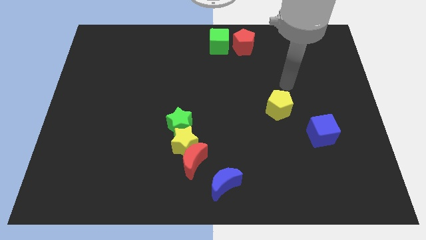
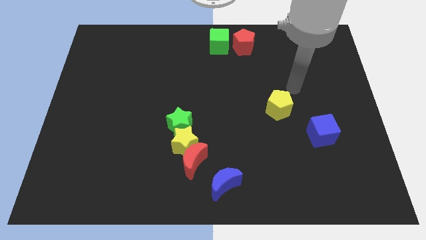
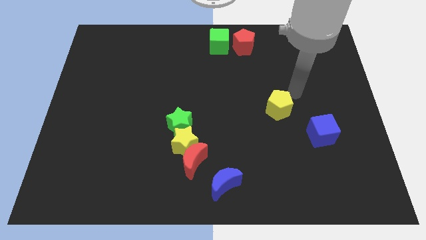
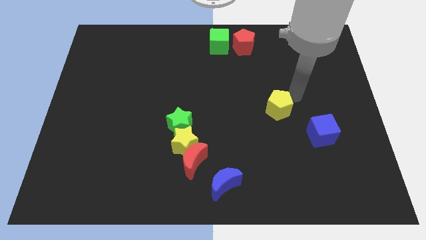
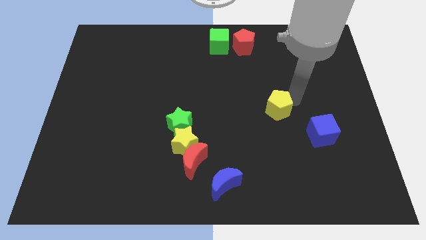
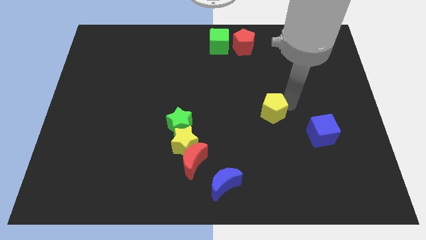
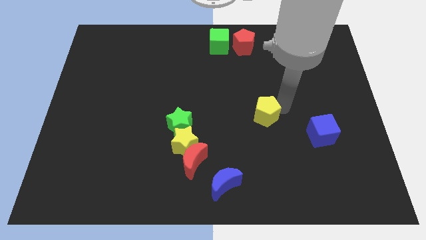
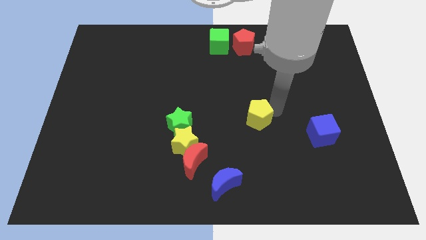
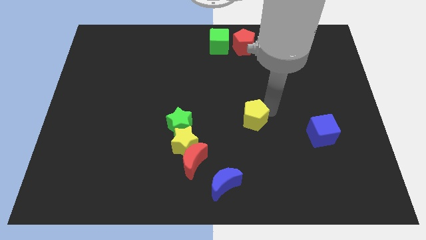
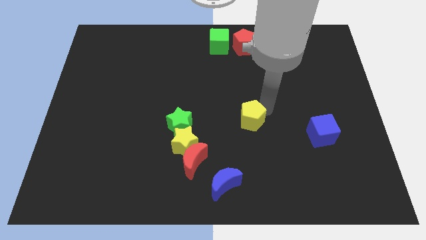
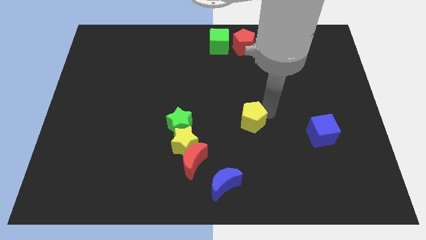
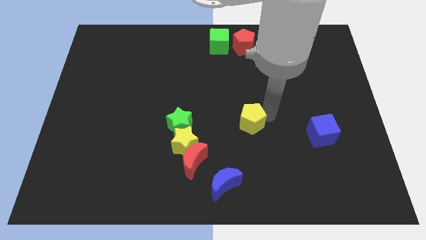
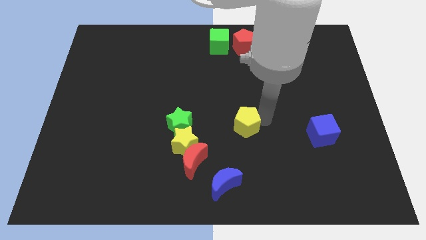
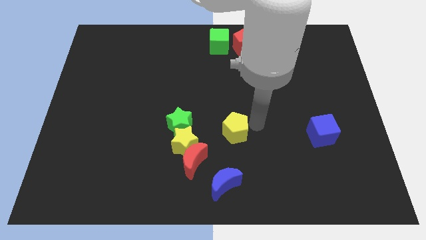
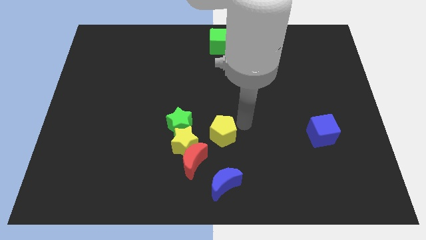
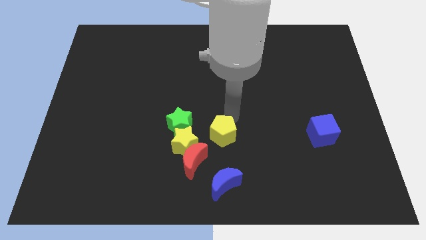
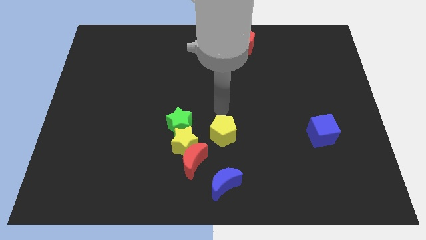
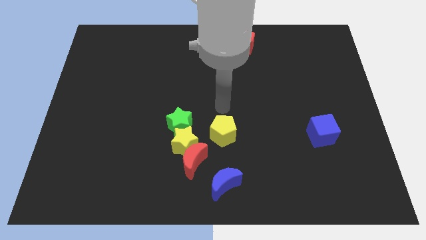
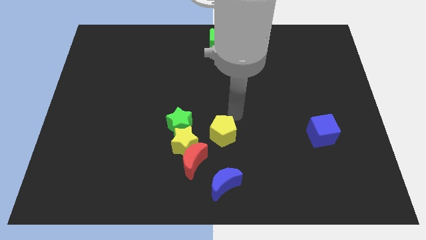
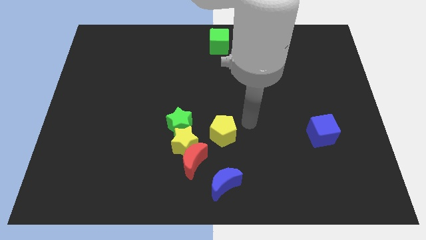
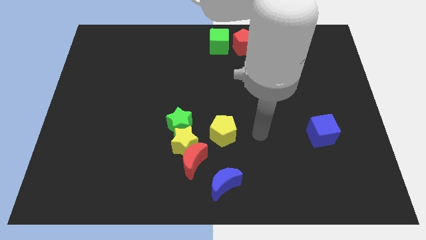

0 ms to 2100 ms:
place the yellow pentagon to the right of the yellow star

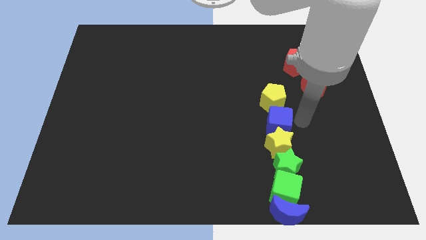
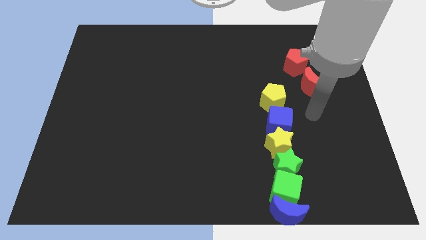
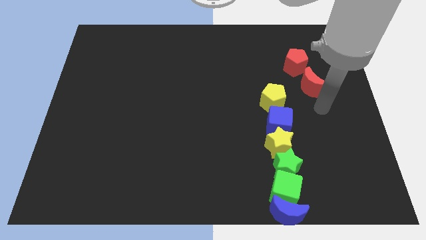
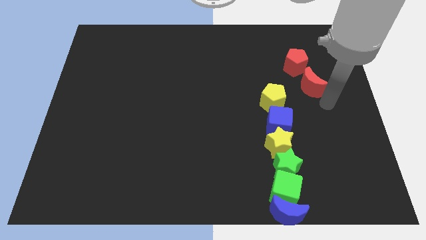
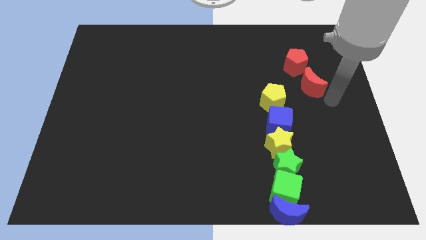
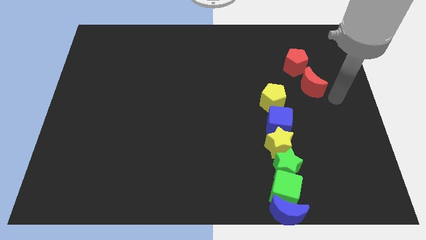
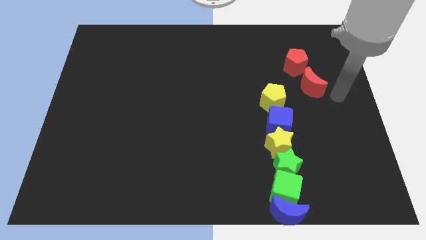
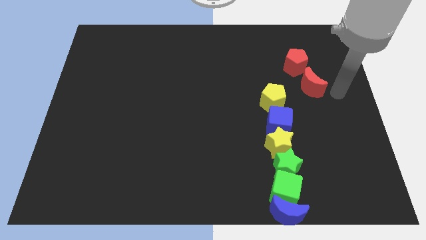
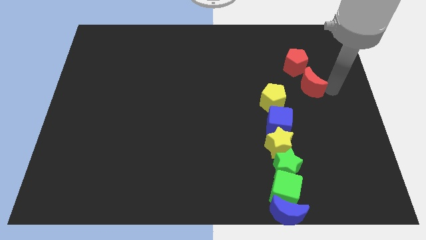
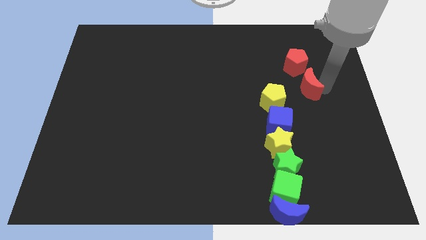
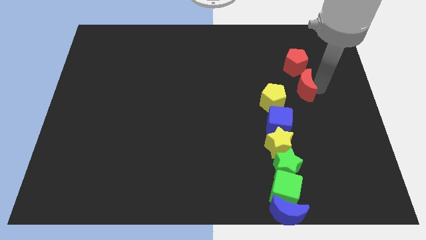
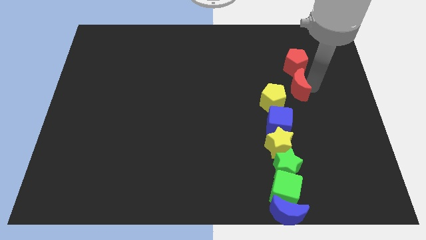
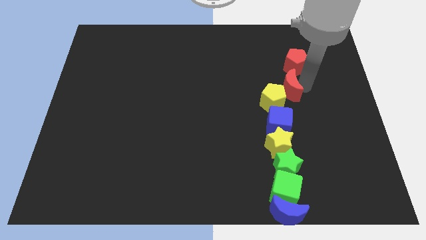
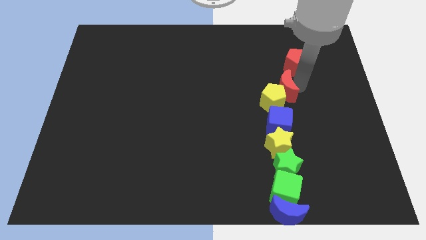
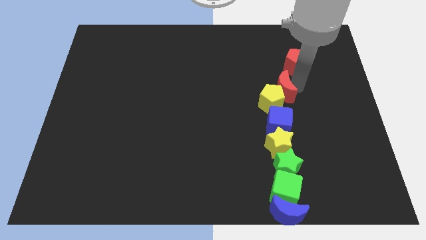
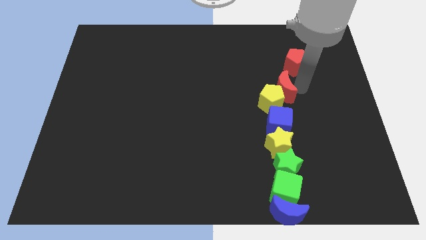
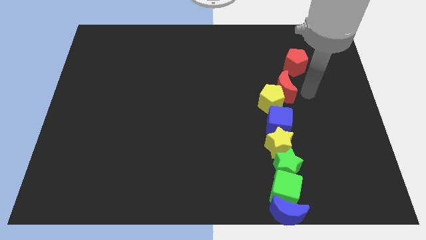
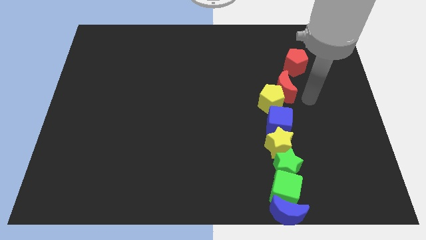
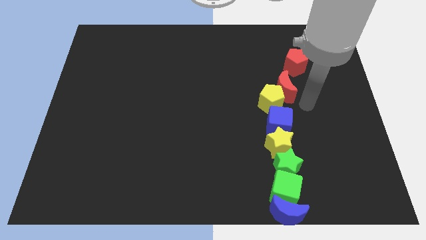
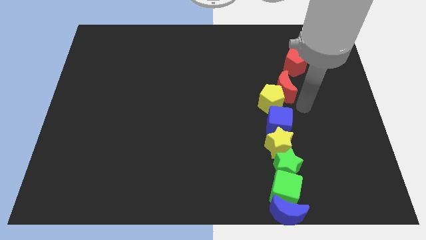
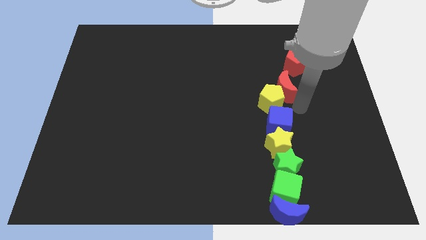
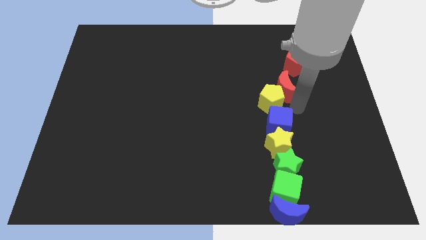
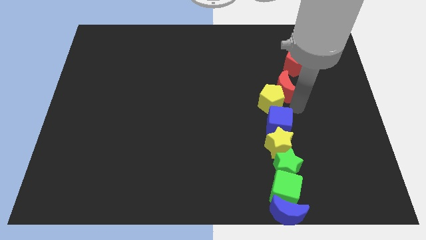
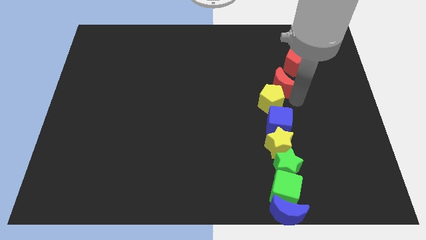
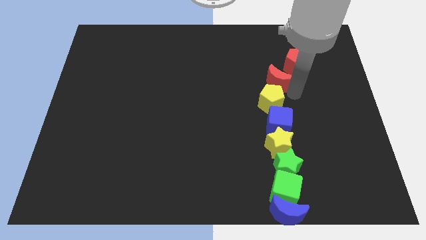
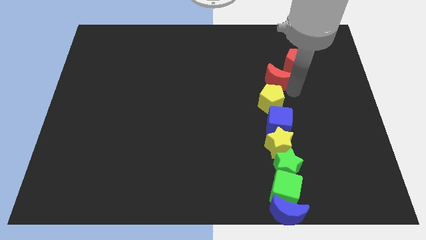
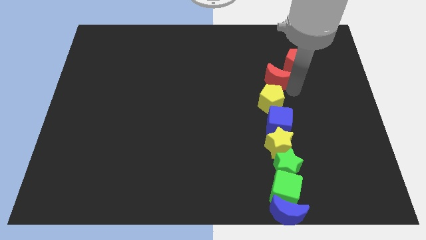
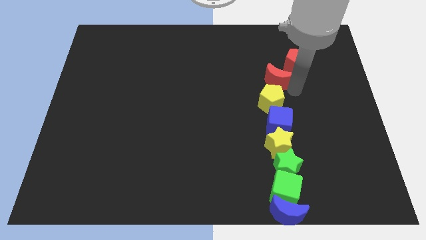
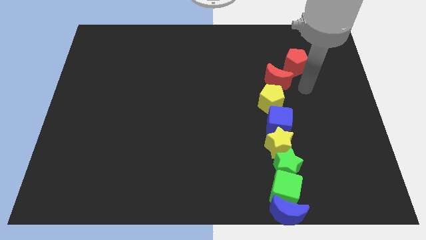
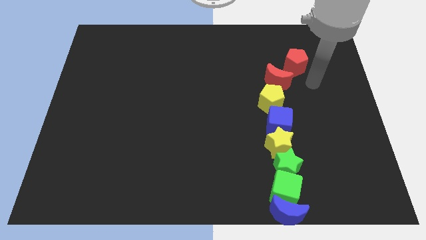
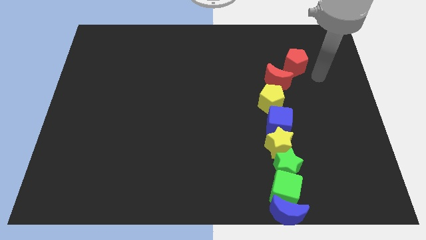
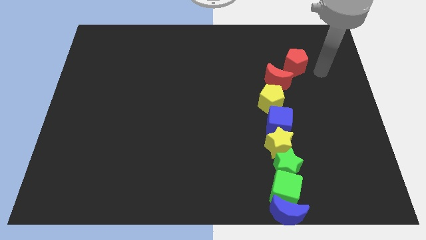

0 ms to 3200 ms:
push the red crescent to the top right side of the yellow pentagon

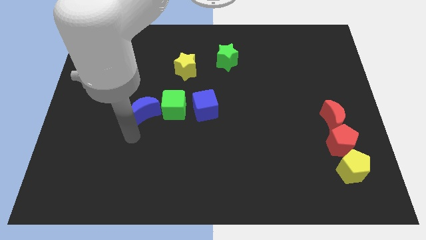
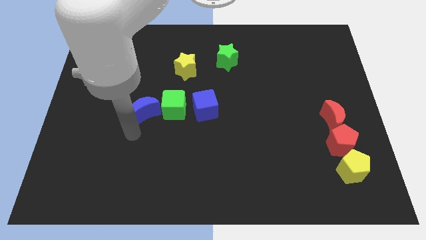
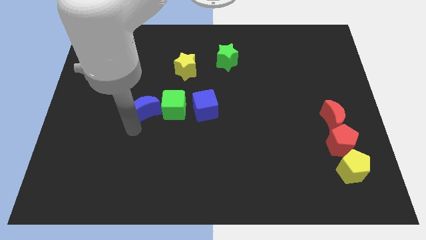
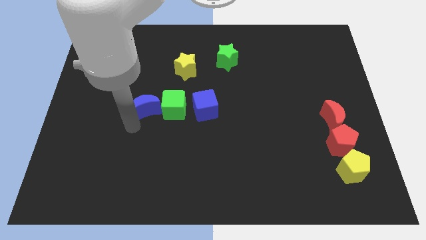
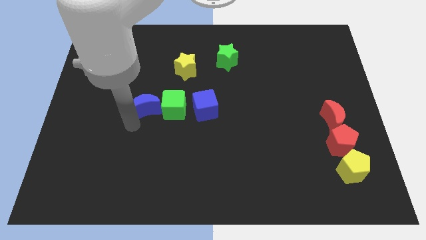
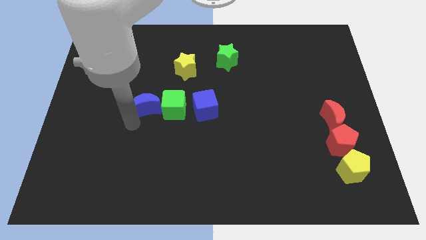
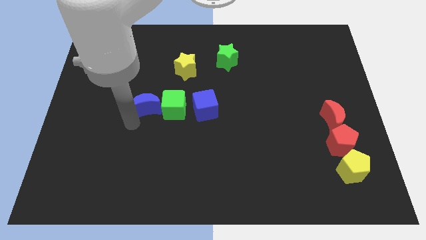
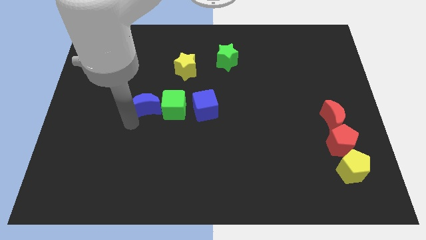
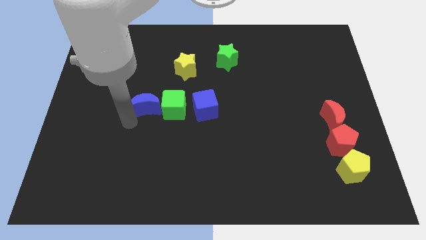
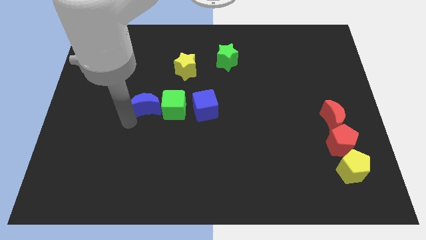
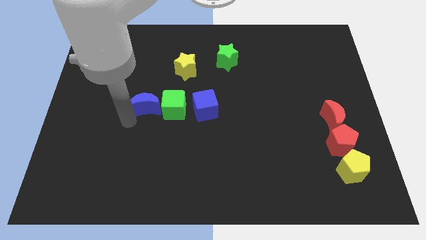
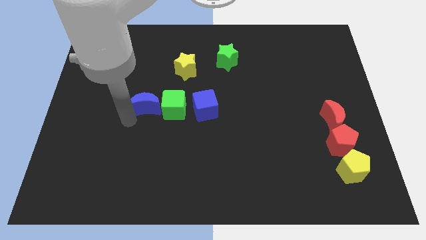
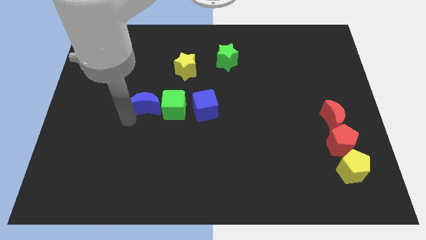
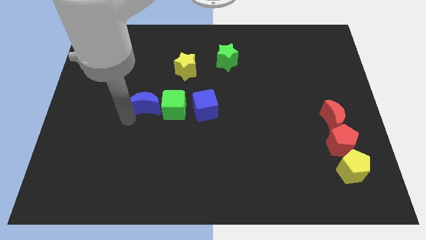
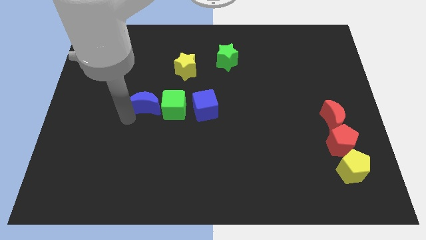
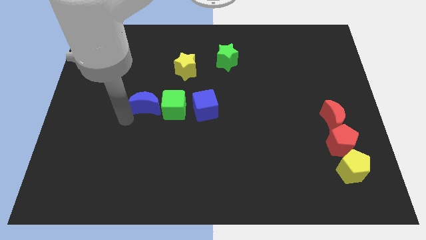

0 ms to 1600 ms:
adjust the blue crescent at the left side of the green cube

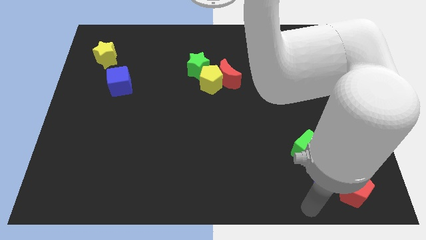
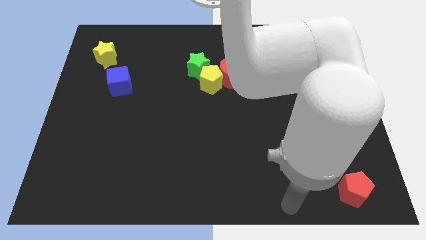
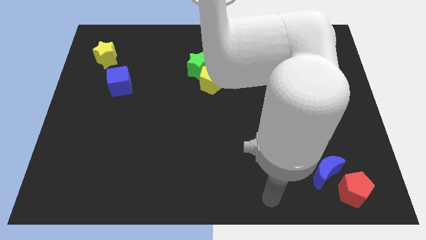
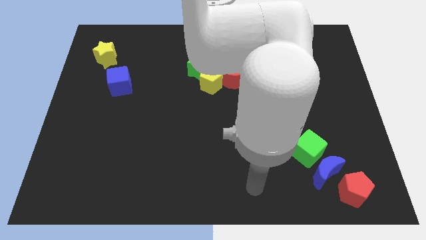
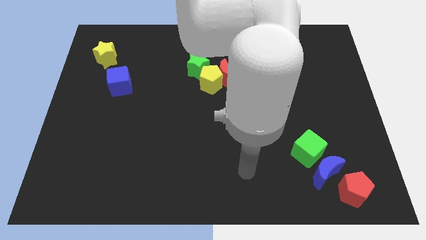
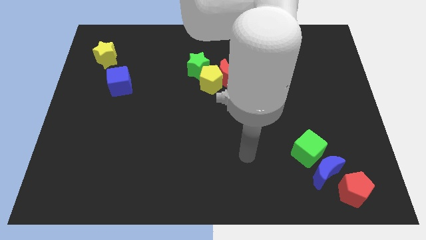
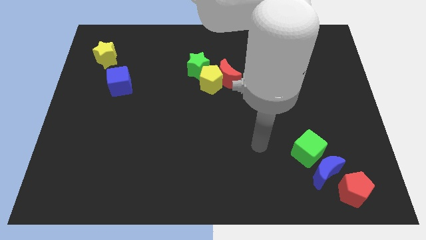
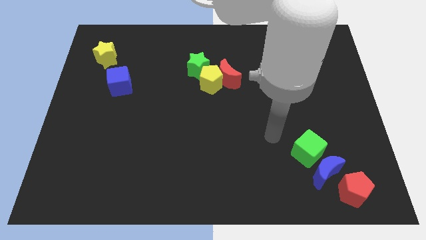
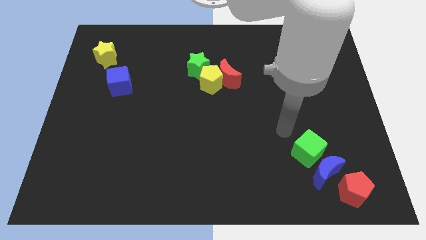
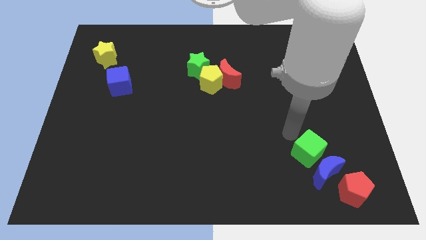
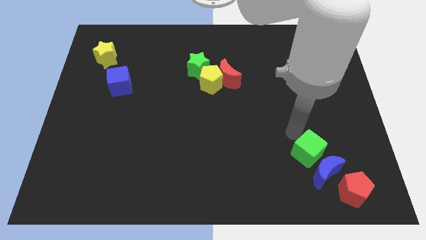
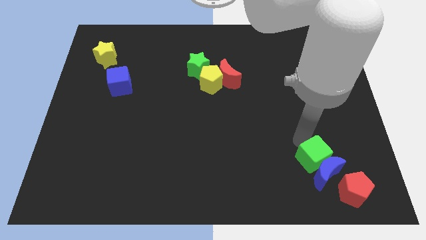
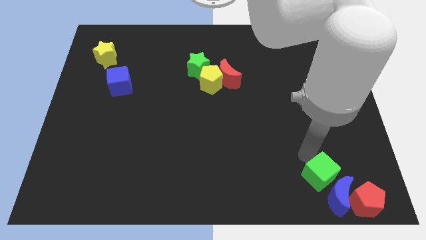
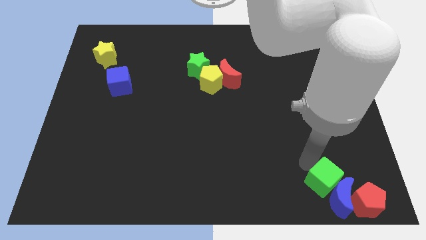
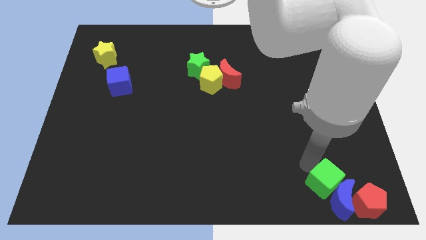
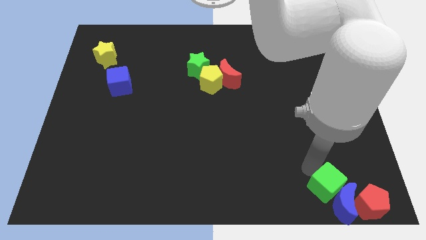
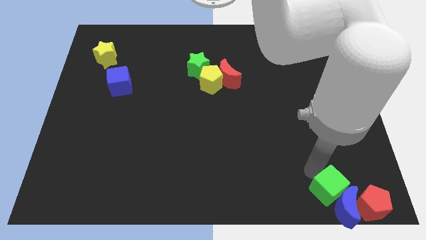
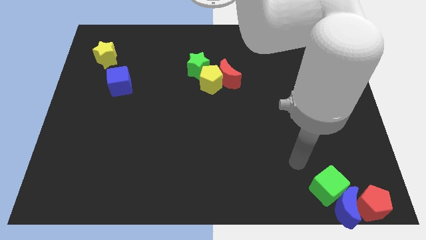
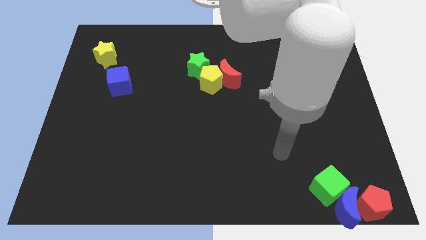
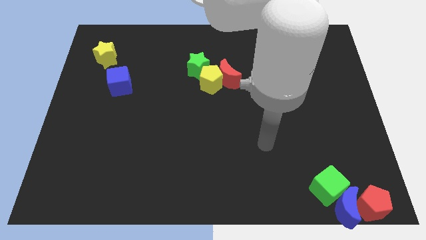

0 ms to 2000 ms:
slightly push the green cube
